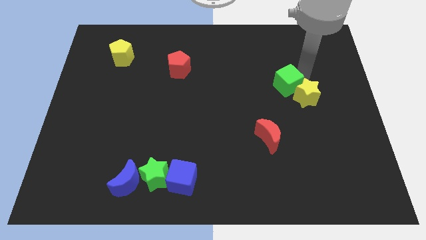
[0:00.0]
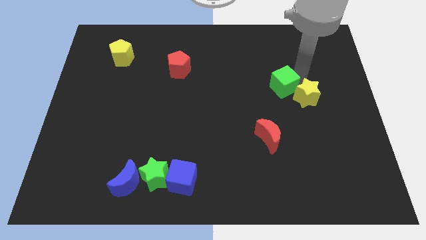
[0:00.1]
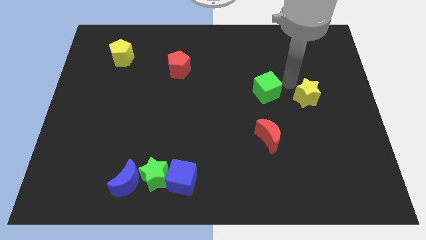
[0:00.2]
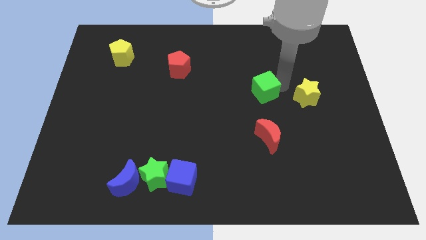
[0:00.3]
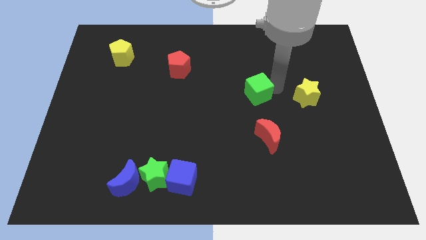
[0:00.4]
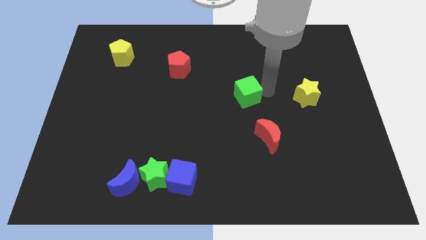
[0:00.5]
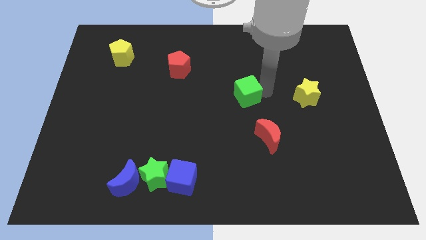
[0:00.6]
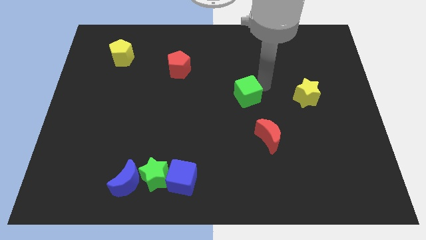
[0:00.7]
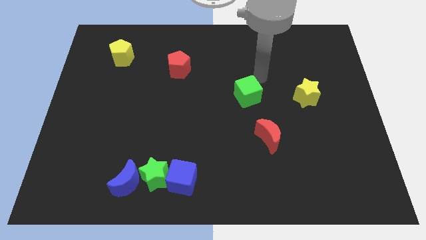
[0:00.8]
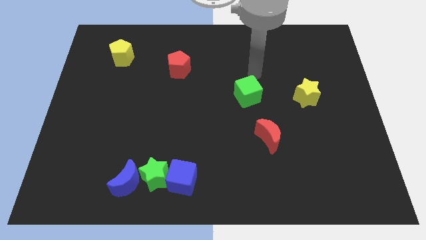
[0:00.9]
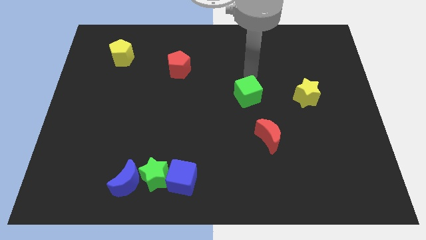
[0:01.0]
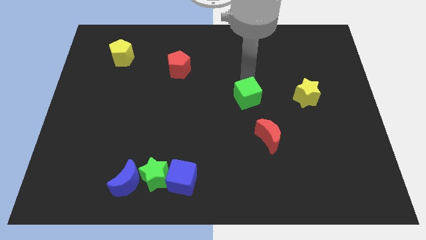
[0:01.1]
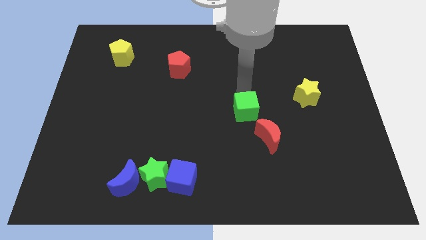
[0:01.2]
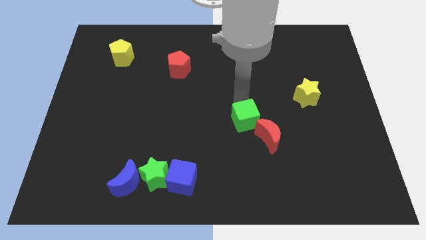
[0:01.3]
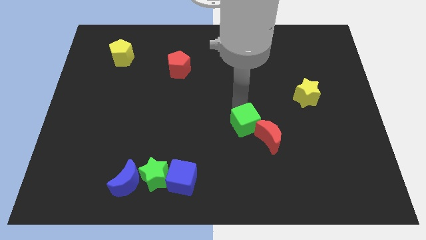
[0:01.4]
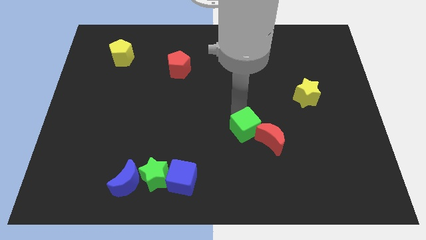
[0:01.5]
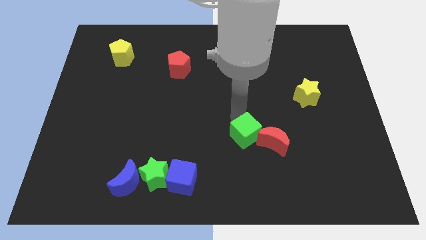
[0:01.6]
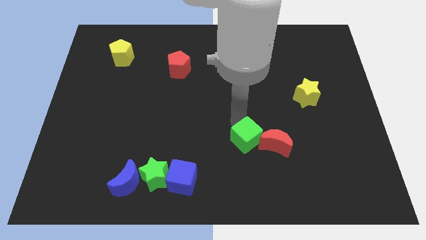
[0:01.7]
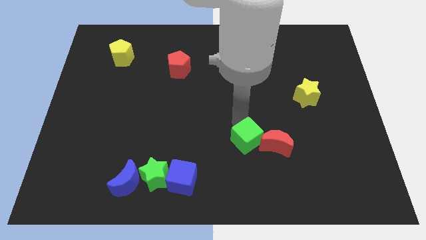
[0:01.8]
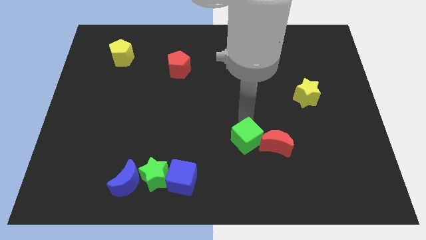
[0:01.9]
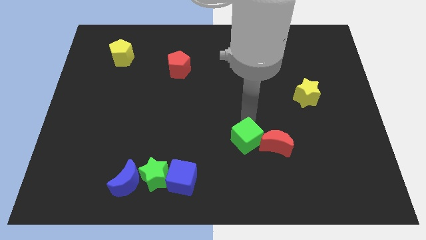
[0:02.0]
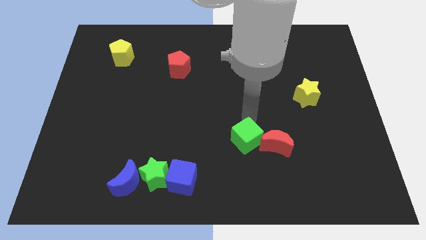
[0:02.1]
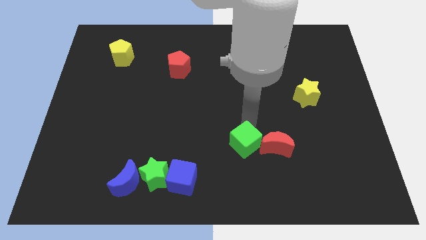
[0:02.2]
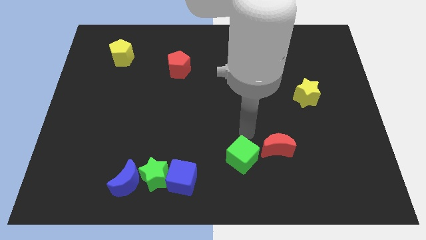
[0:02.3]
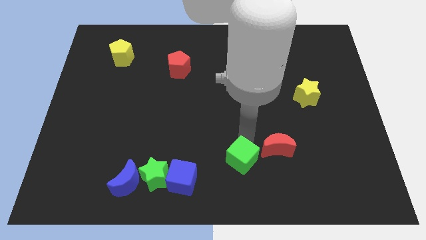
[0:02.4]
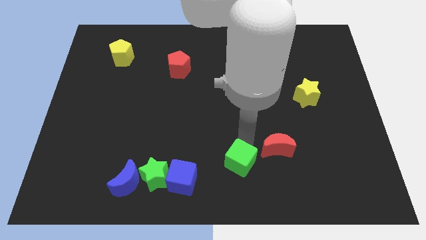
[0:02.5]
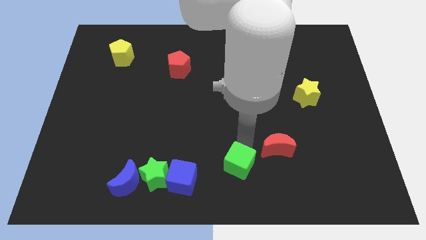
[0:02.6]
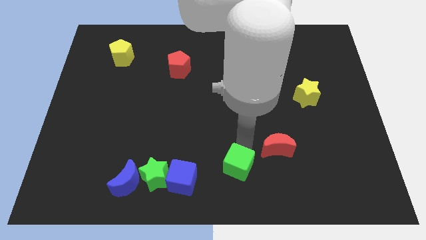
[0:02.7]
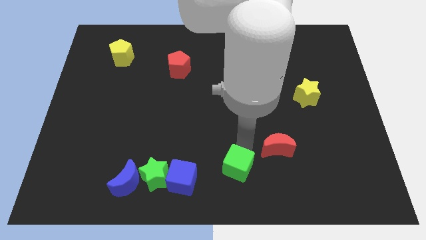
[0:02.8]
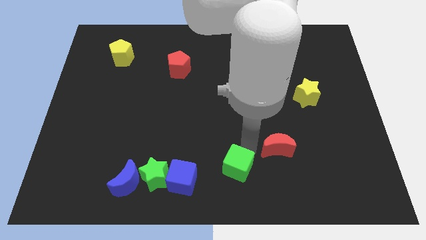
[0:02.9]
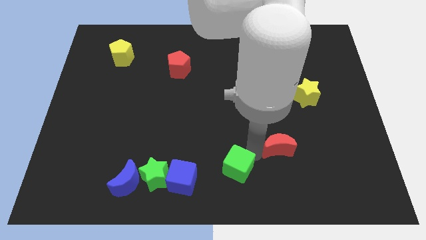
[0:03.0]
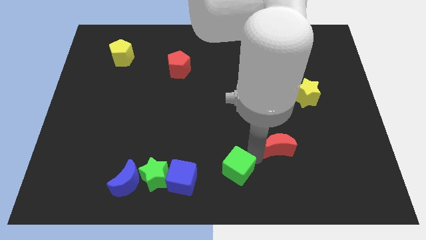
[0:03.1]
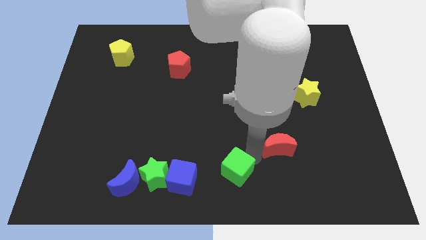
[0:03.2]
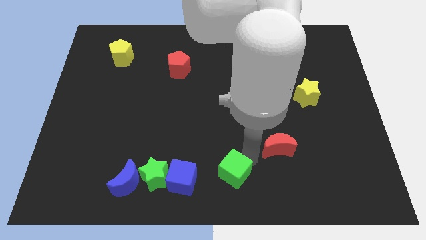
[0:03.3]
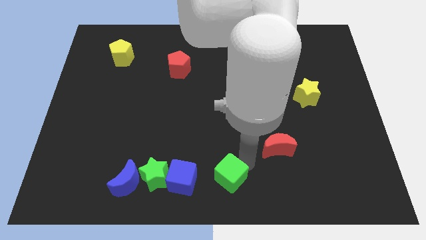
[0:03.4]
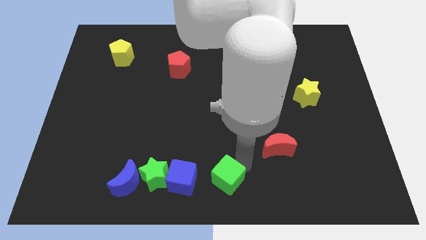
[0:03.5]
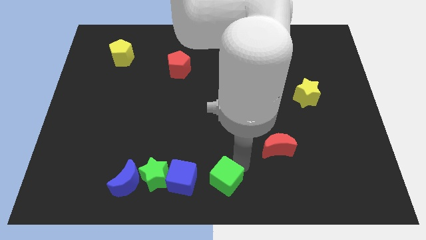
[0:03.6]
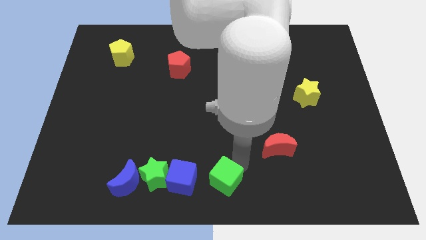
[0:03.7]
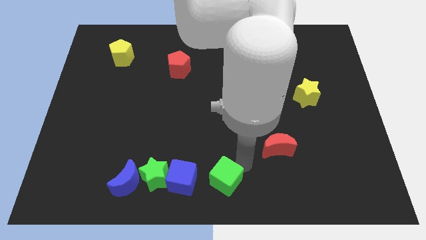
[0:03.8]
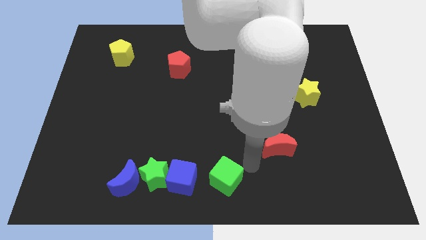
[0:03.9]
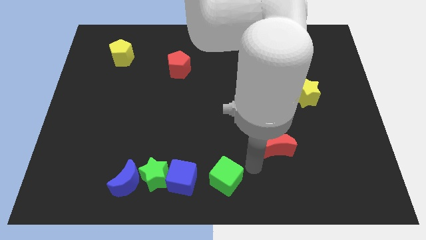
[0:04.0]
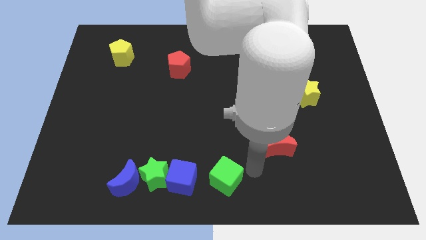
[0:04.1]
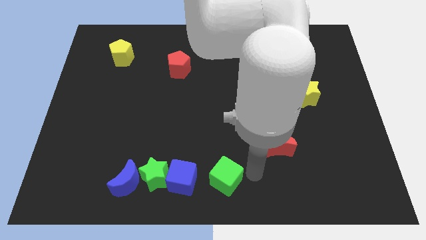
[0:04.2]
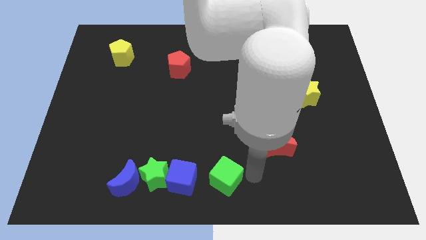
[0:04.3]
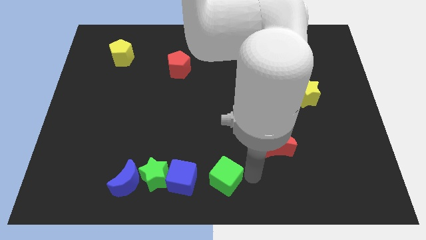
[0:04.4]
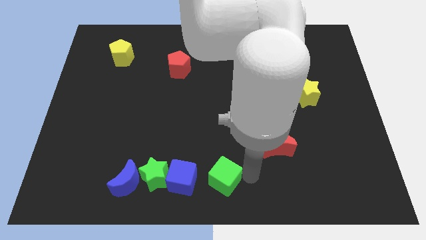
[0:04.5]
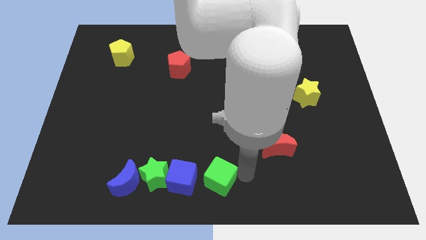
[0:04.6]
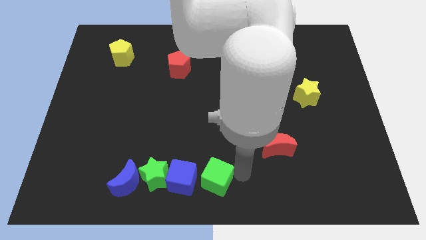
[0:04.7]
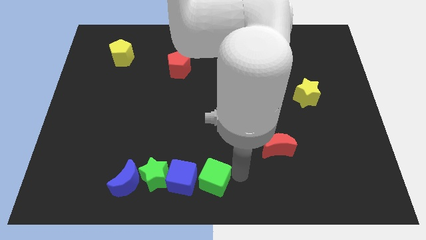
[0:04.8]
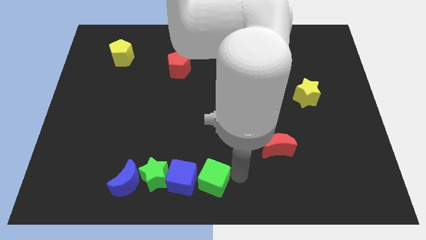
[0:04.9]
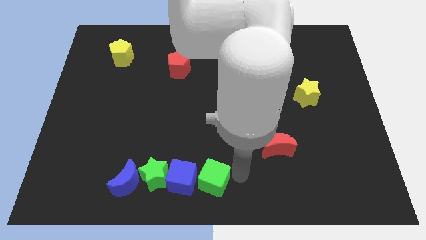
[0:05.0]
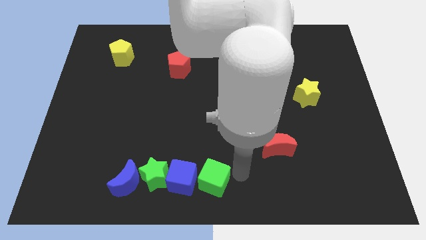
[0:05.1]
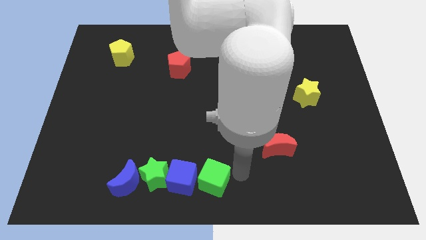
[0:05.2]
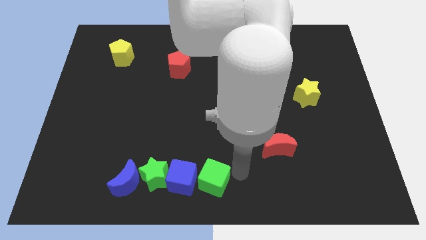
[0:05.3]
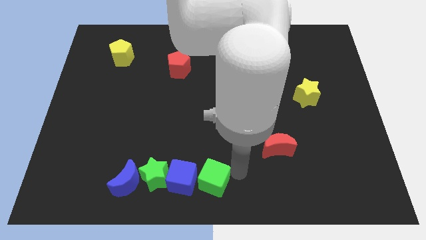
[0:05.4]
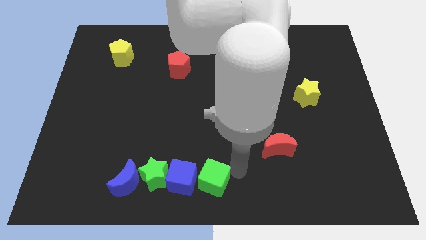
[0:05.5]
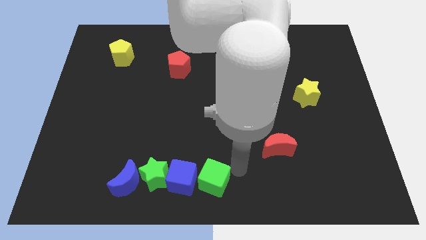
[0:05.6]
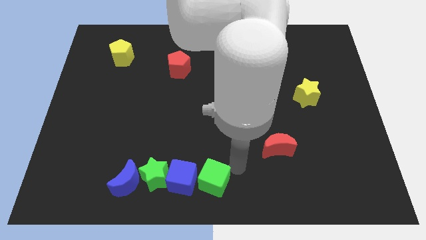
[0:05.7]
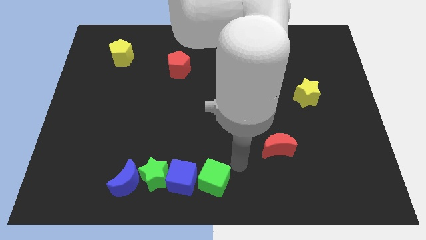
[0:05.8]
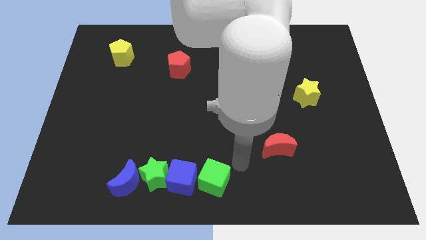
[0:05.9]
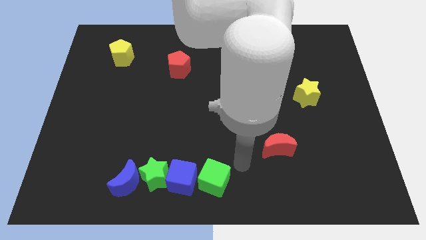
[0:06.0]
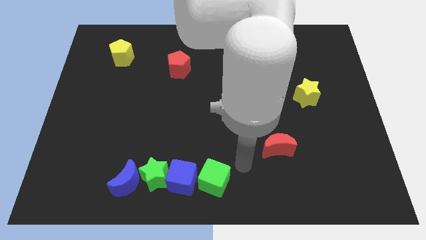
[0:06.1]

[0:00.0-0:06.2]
push the green square right to the blue square

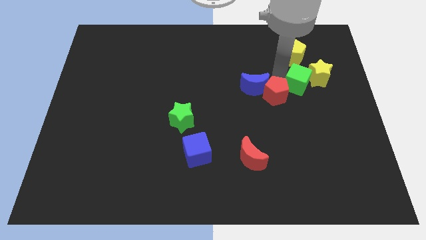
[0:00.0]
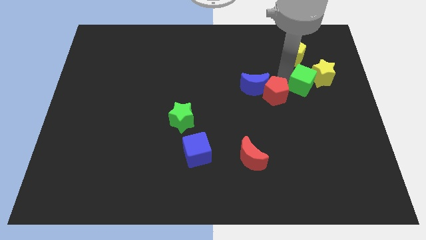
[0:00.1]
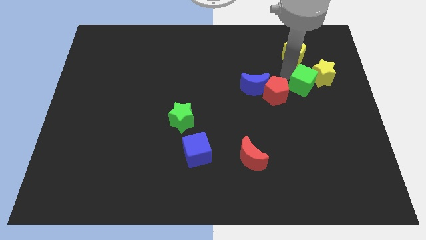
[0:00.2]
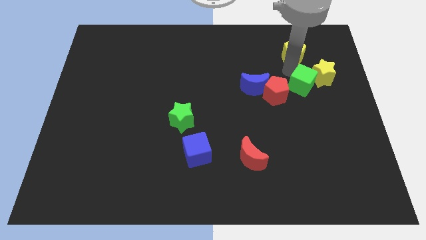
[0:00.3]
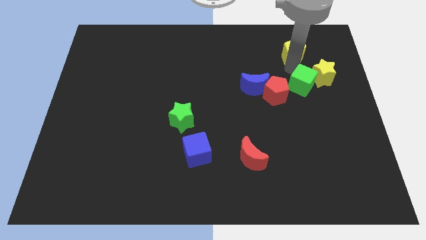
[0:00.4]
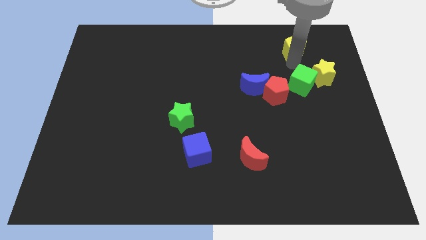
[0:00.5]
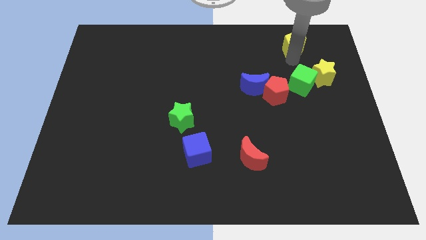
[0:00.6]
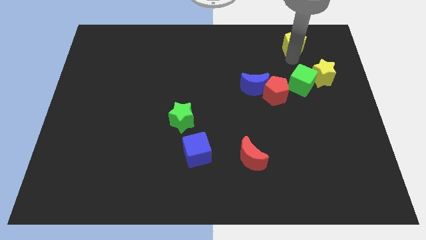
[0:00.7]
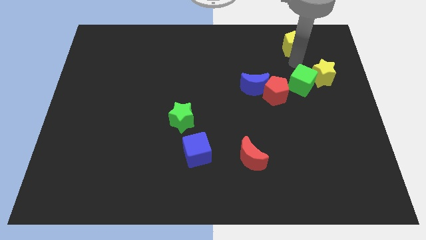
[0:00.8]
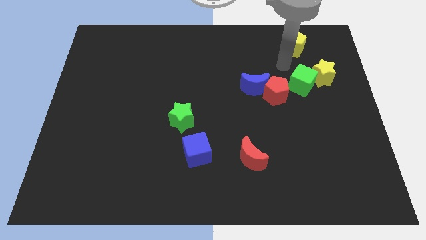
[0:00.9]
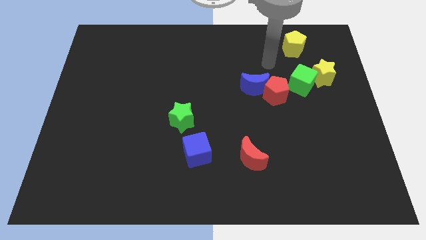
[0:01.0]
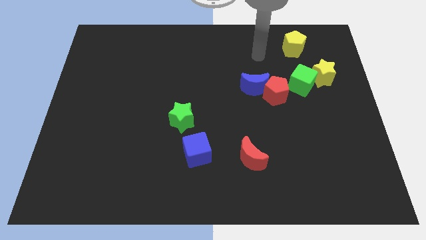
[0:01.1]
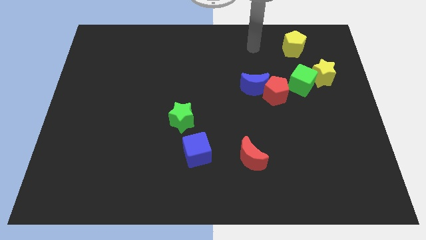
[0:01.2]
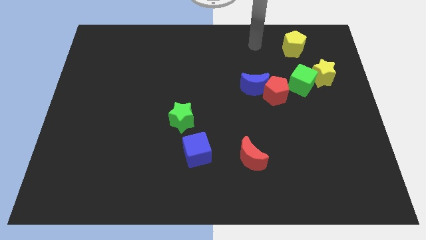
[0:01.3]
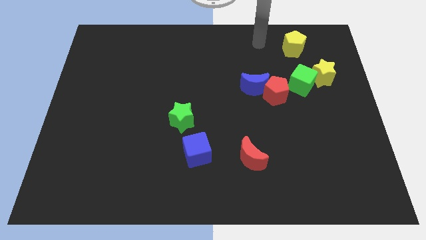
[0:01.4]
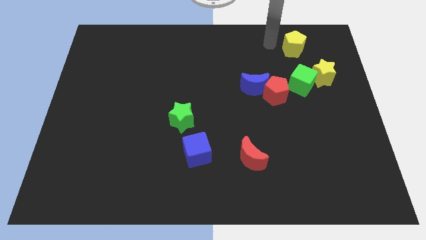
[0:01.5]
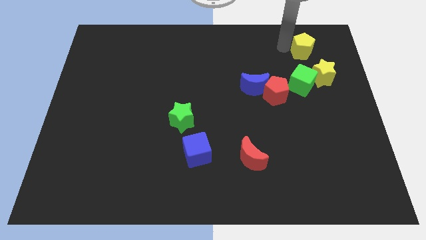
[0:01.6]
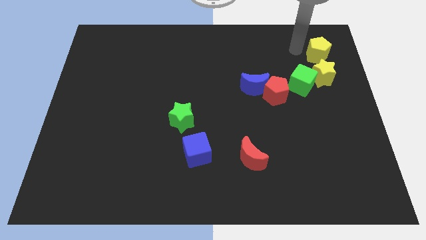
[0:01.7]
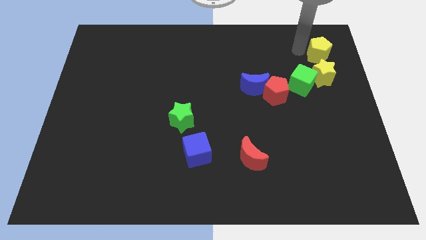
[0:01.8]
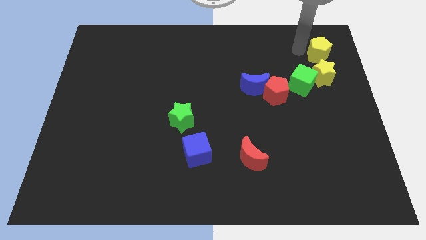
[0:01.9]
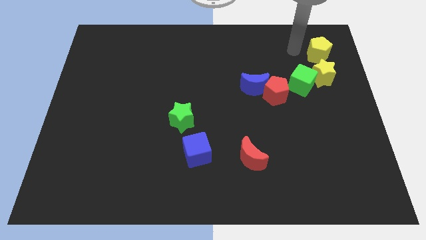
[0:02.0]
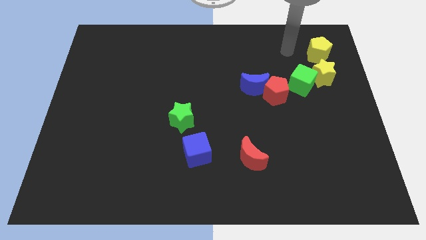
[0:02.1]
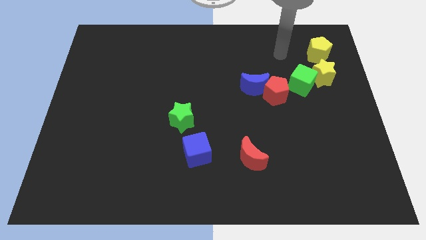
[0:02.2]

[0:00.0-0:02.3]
place the yellow pentagon above the yellow star

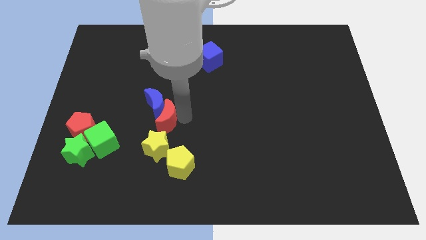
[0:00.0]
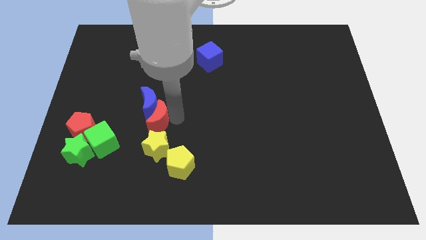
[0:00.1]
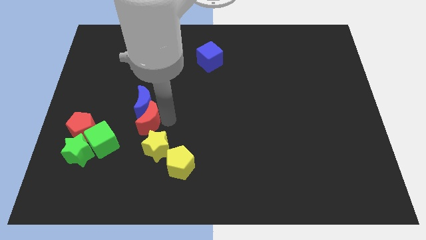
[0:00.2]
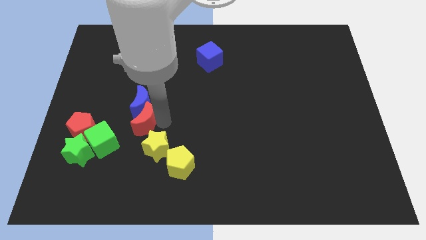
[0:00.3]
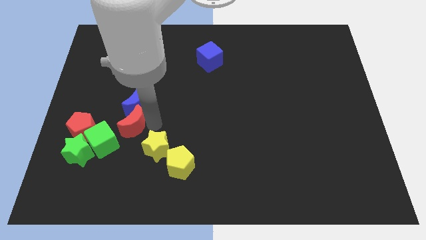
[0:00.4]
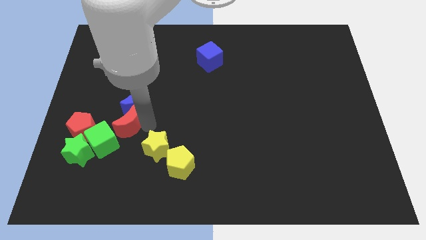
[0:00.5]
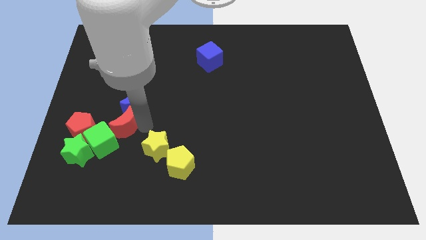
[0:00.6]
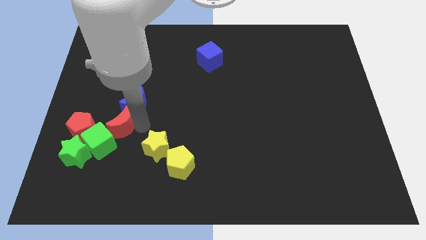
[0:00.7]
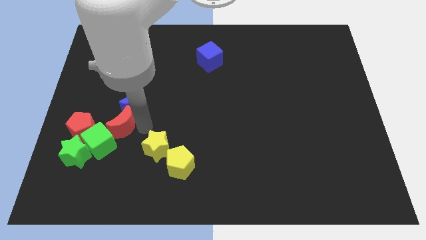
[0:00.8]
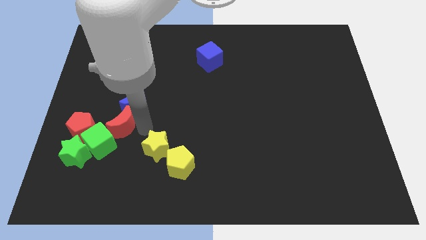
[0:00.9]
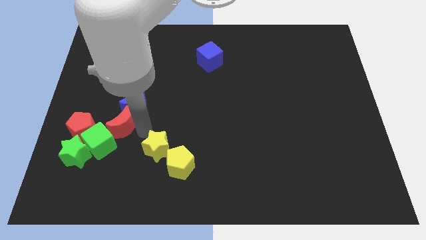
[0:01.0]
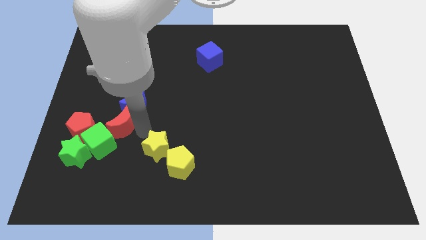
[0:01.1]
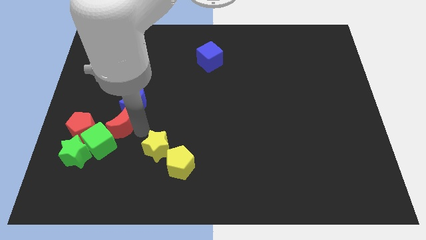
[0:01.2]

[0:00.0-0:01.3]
move the red crescent towards the top of the green cube
